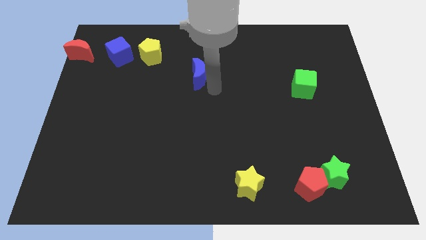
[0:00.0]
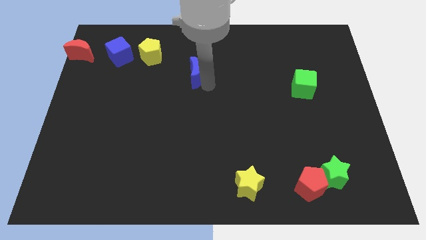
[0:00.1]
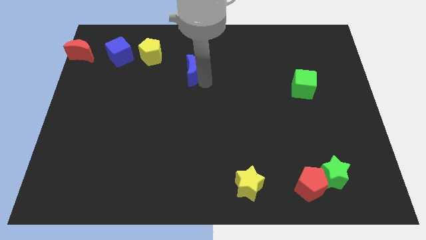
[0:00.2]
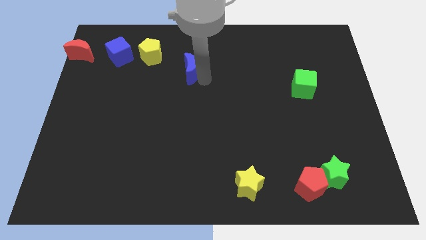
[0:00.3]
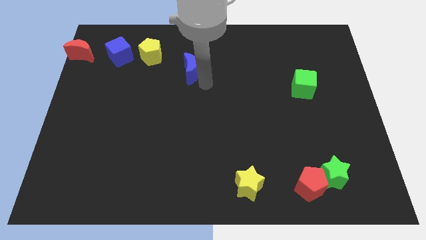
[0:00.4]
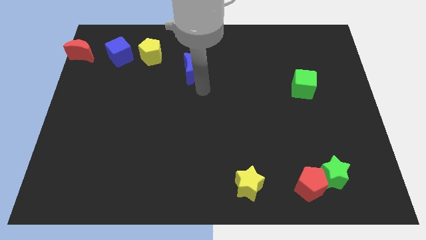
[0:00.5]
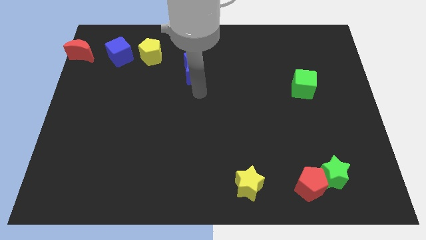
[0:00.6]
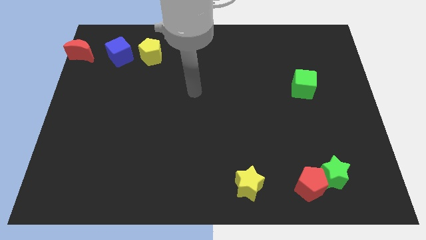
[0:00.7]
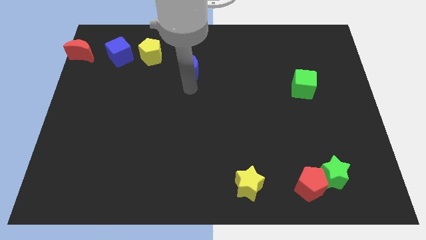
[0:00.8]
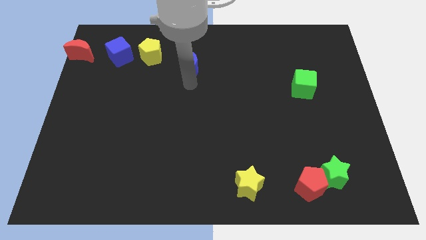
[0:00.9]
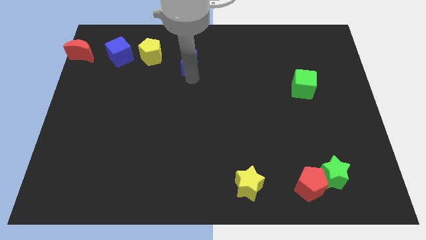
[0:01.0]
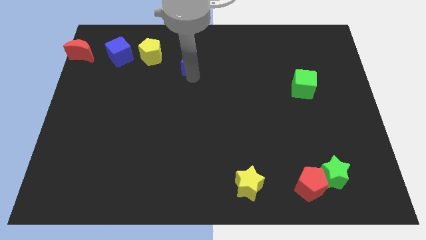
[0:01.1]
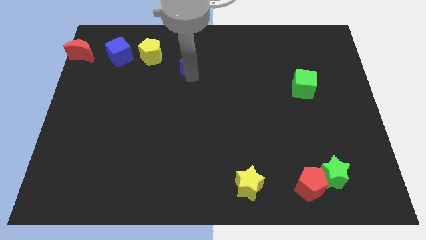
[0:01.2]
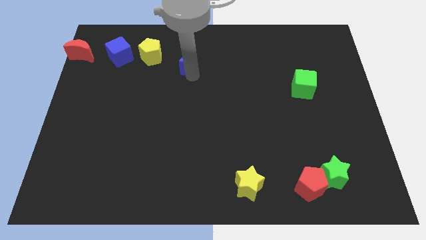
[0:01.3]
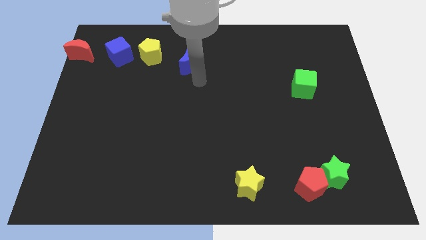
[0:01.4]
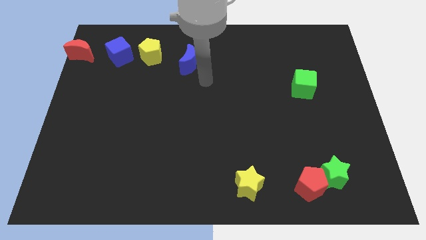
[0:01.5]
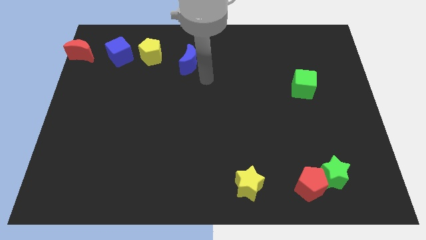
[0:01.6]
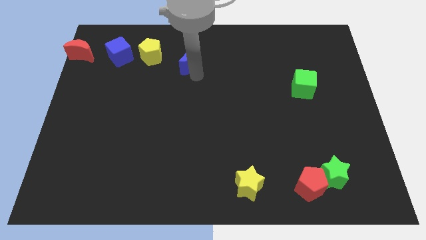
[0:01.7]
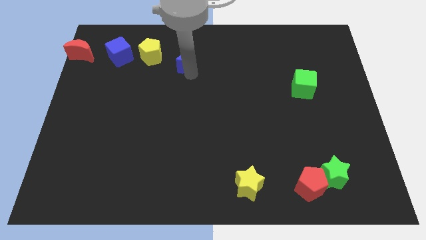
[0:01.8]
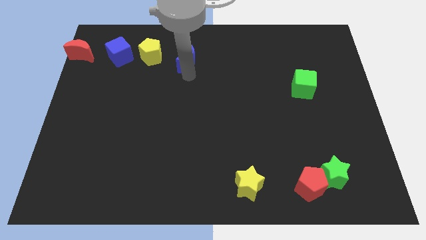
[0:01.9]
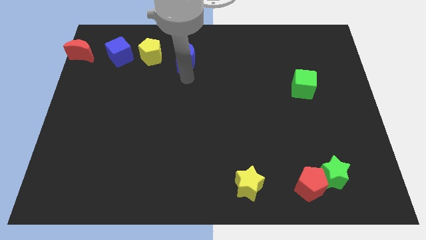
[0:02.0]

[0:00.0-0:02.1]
move blue crescent slightly towards the right side of the yellow pentagon

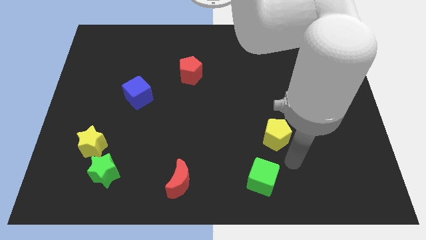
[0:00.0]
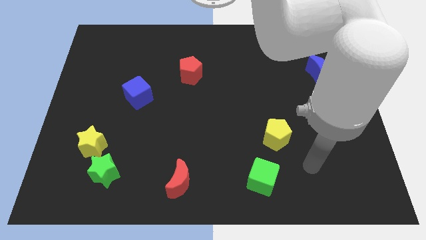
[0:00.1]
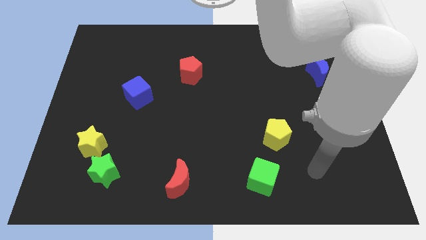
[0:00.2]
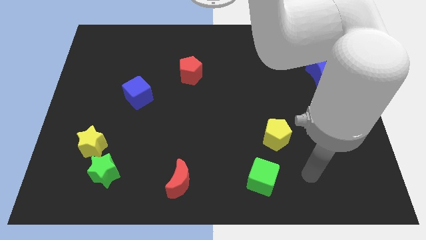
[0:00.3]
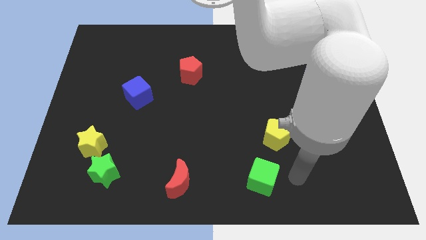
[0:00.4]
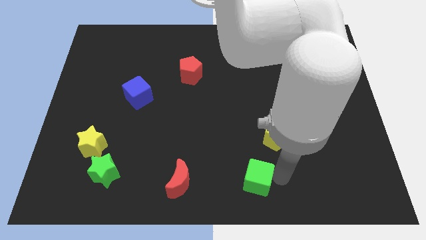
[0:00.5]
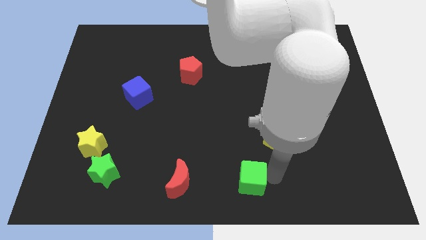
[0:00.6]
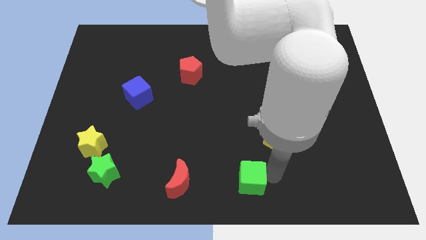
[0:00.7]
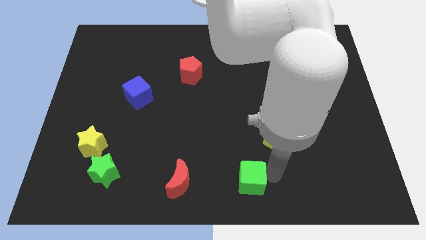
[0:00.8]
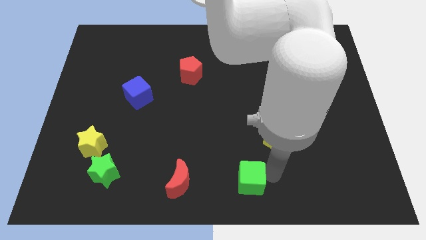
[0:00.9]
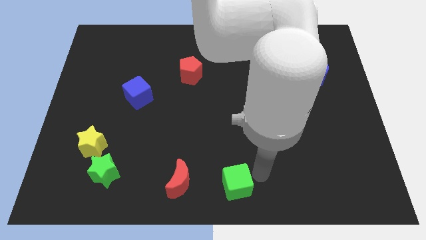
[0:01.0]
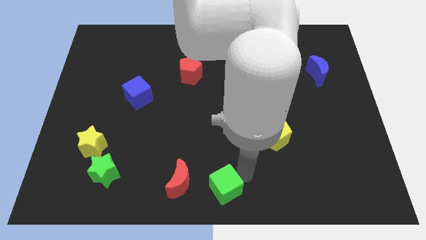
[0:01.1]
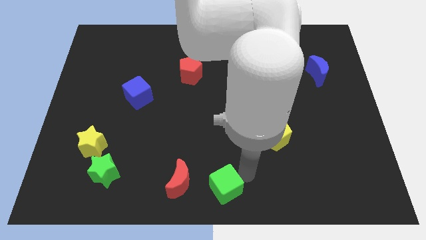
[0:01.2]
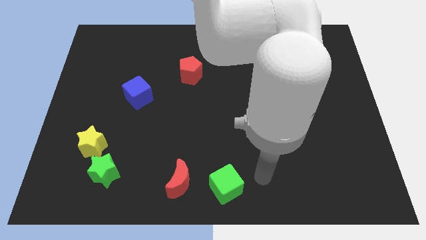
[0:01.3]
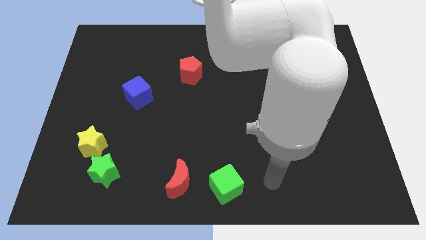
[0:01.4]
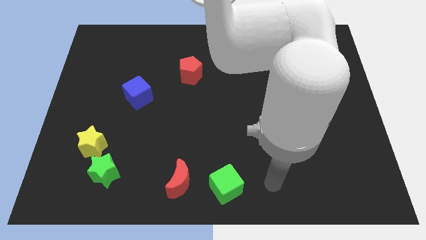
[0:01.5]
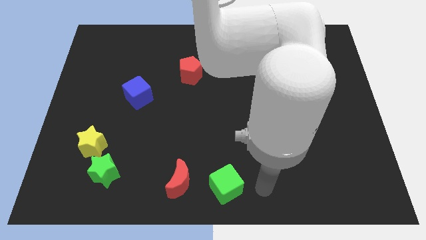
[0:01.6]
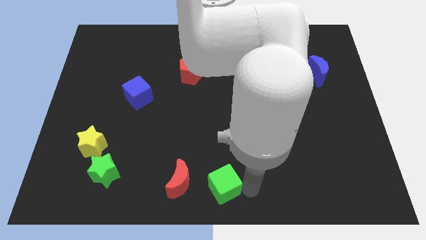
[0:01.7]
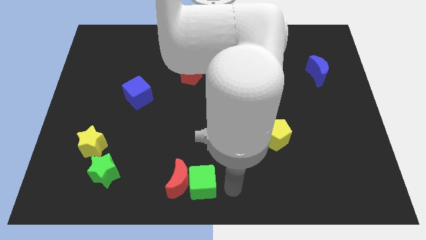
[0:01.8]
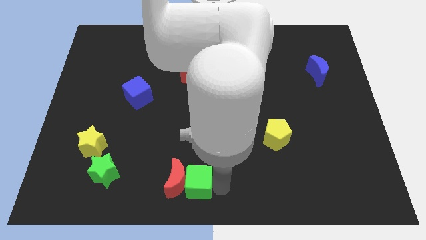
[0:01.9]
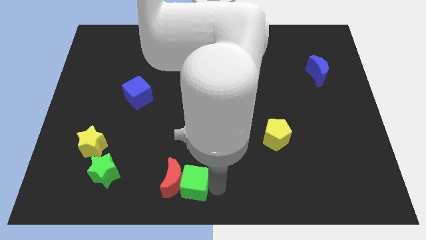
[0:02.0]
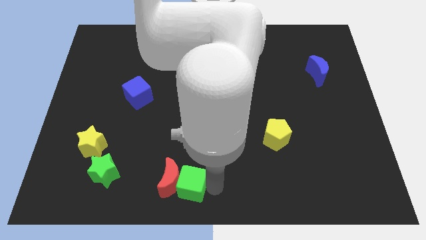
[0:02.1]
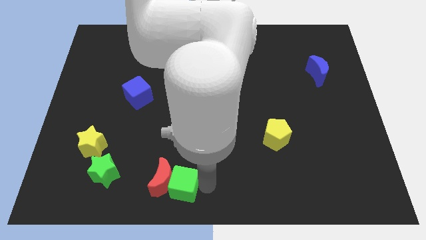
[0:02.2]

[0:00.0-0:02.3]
move the green cube into the red crescent

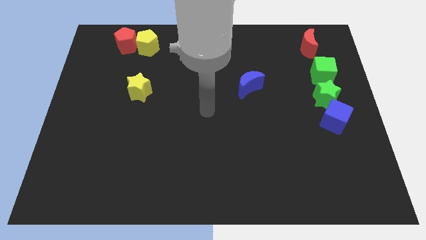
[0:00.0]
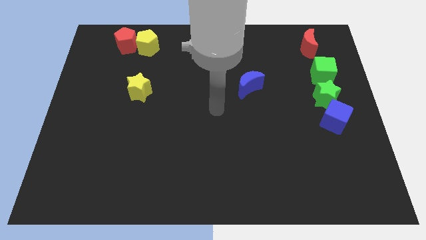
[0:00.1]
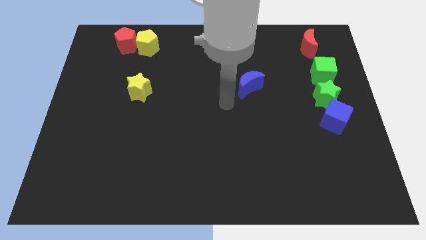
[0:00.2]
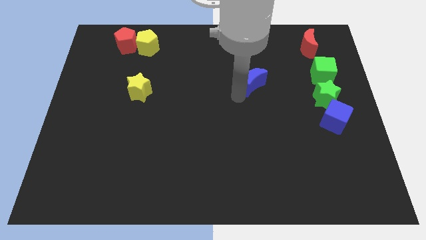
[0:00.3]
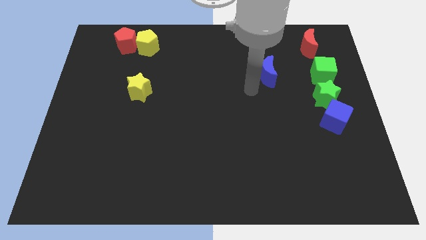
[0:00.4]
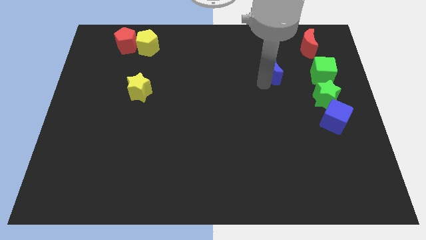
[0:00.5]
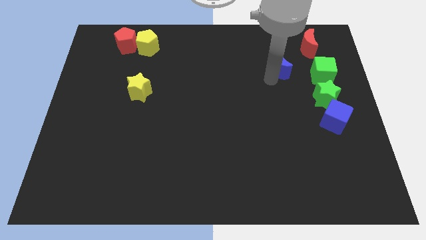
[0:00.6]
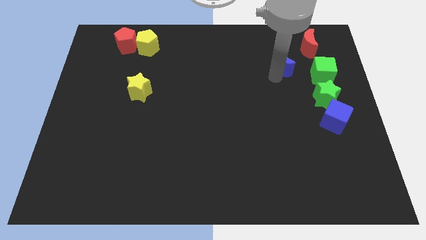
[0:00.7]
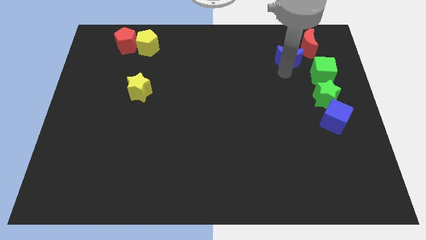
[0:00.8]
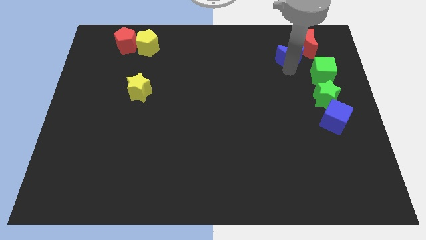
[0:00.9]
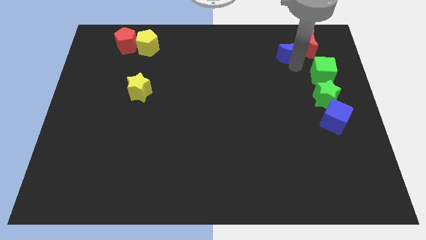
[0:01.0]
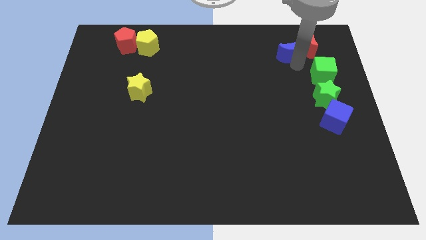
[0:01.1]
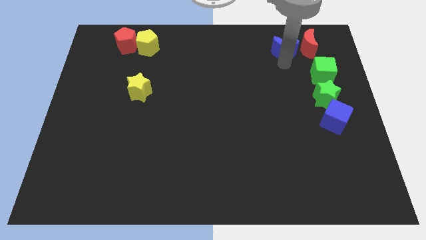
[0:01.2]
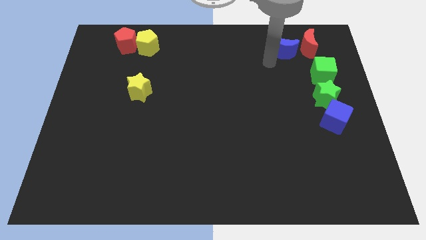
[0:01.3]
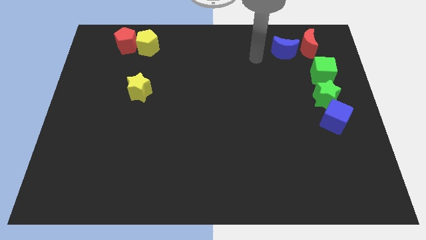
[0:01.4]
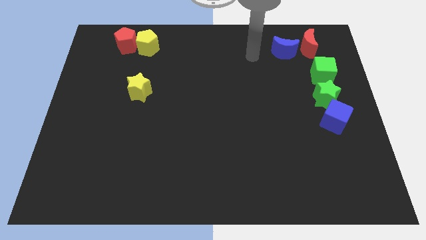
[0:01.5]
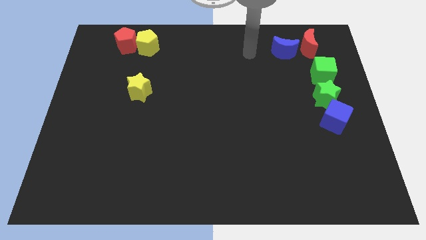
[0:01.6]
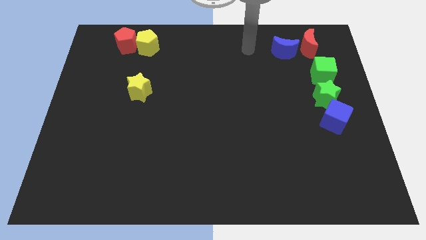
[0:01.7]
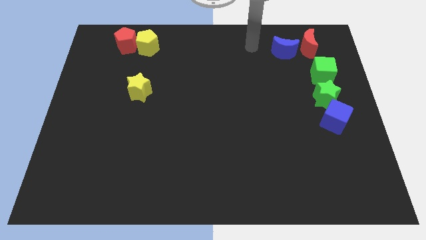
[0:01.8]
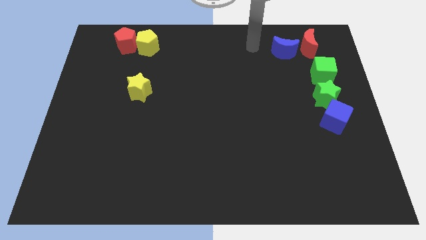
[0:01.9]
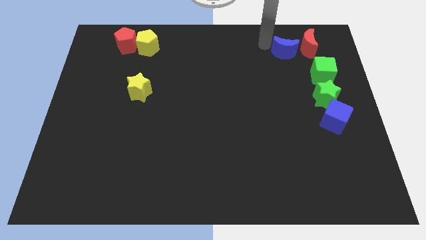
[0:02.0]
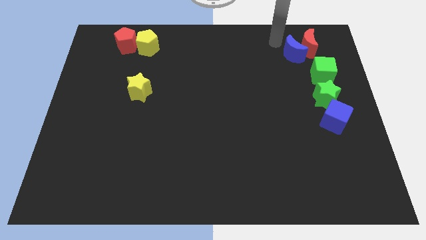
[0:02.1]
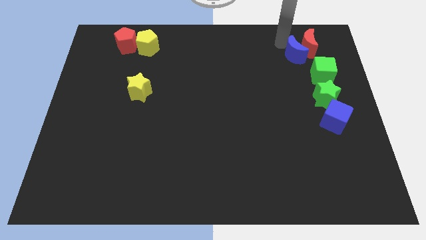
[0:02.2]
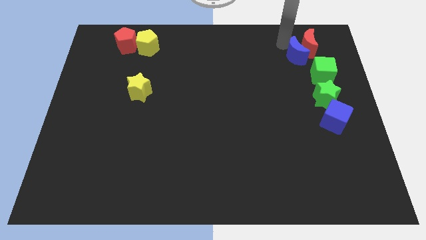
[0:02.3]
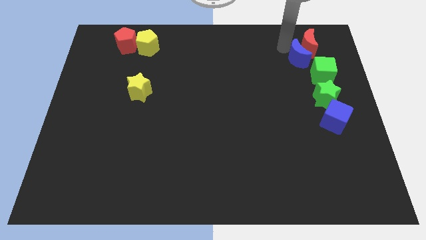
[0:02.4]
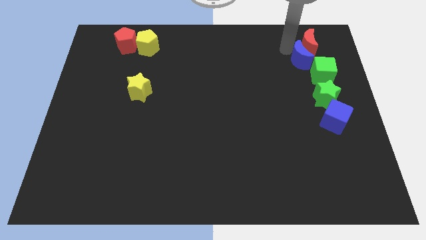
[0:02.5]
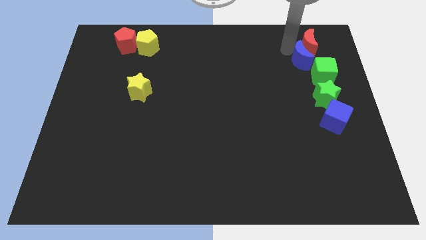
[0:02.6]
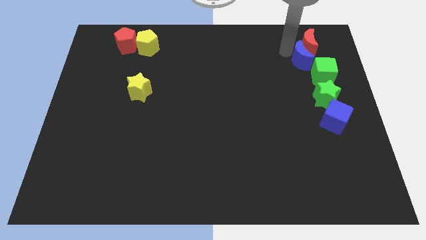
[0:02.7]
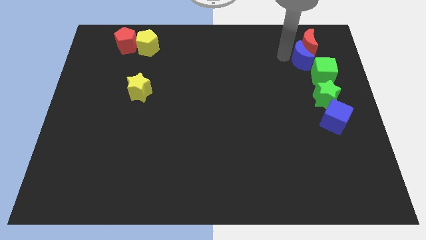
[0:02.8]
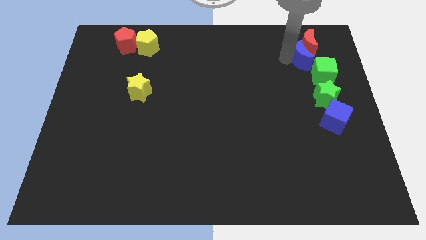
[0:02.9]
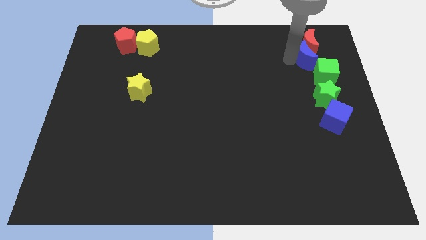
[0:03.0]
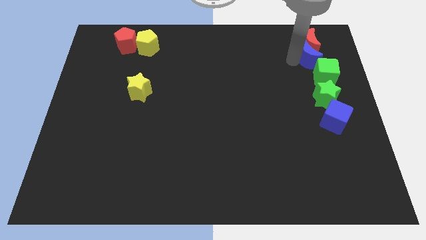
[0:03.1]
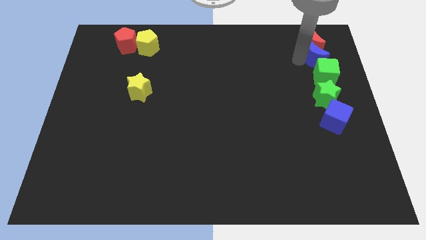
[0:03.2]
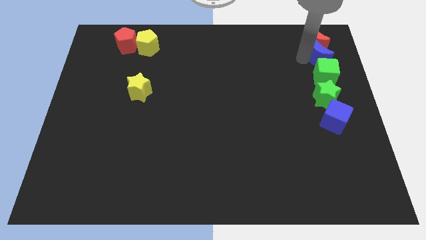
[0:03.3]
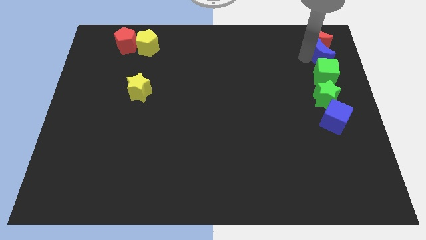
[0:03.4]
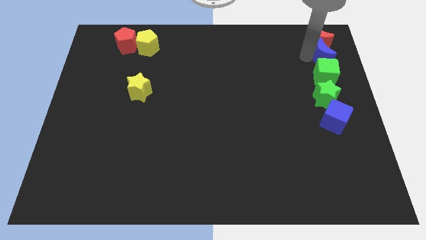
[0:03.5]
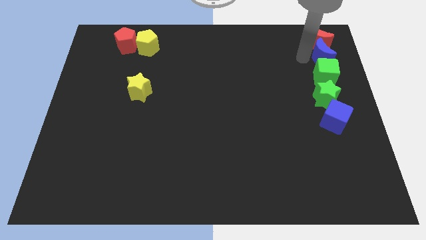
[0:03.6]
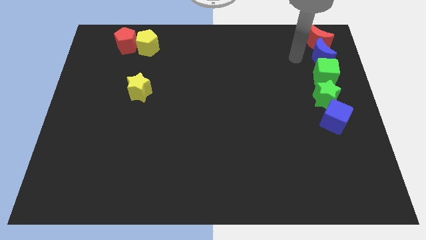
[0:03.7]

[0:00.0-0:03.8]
place blue crescent in between red crescent and green cube

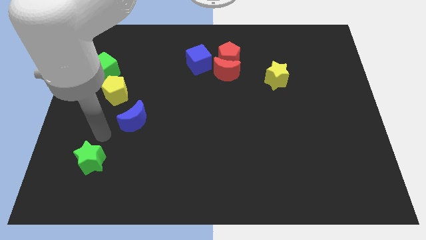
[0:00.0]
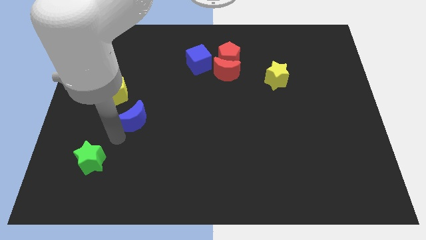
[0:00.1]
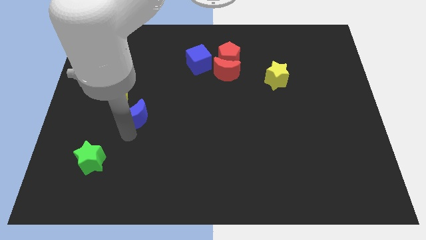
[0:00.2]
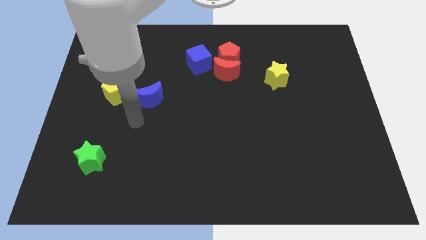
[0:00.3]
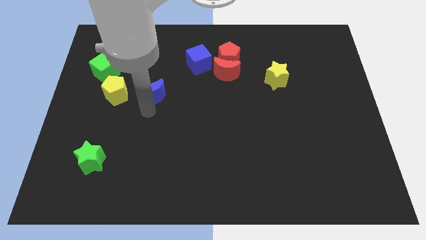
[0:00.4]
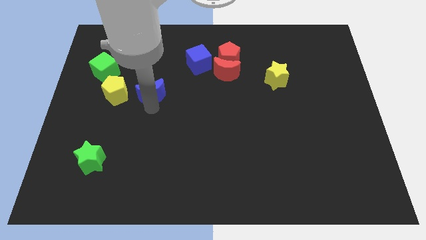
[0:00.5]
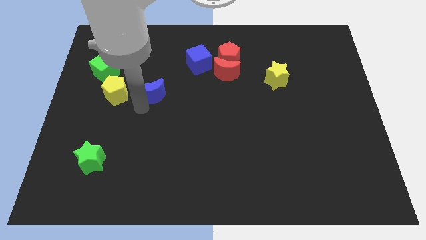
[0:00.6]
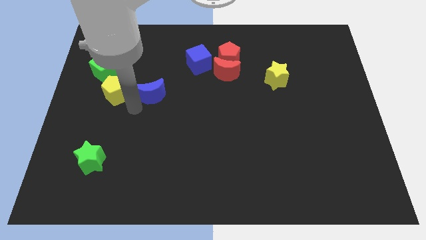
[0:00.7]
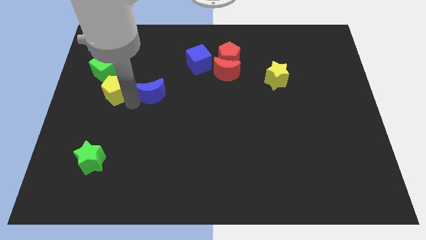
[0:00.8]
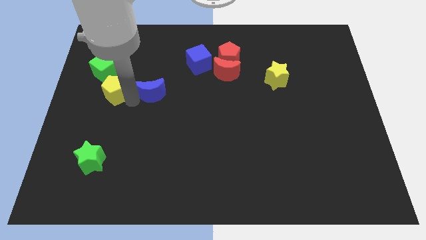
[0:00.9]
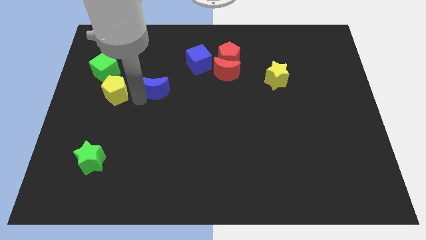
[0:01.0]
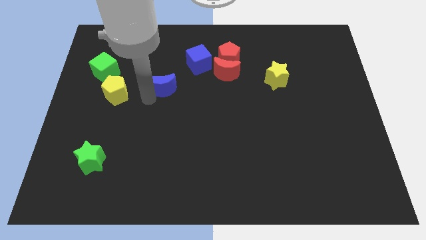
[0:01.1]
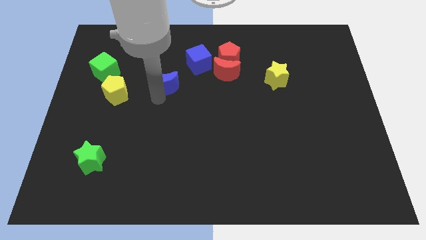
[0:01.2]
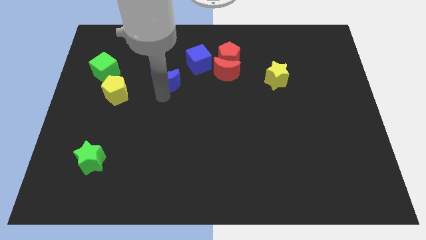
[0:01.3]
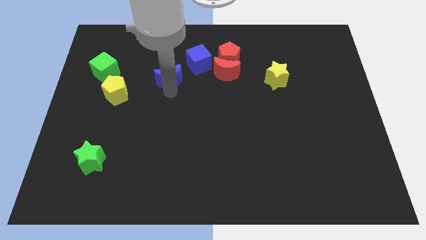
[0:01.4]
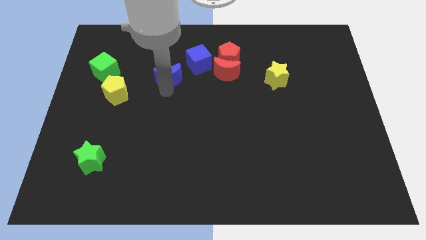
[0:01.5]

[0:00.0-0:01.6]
place the blue moon in between the blue cube and yellow pentagon
